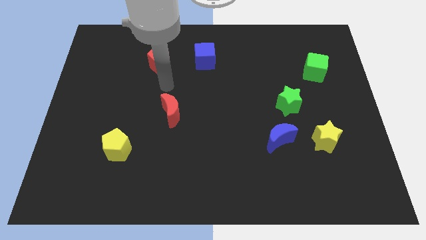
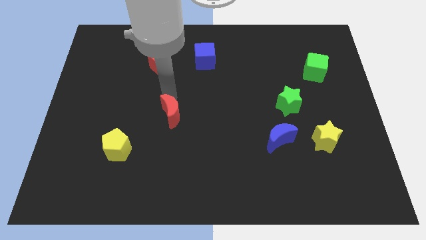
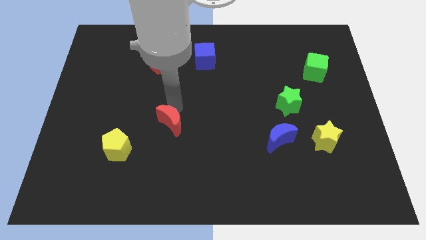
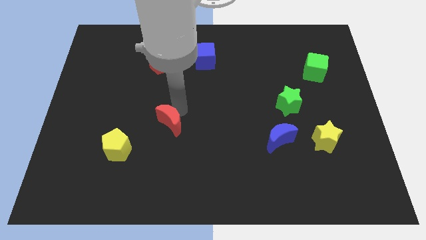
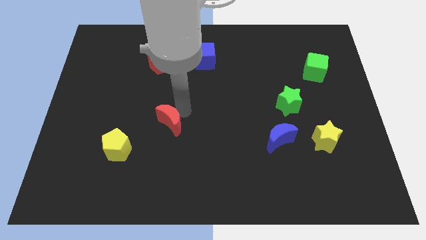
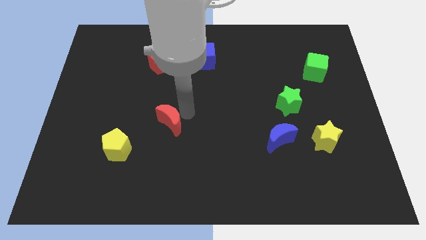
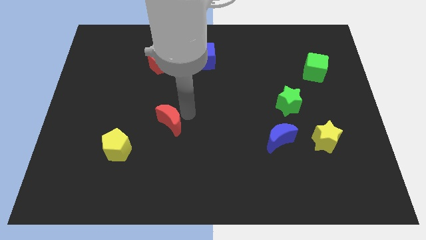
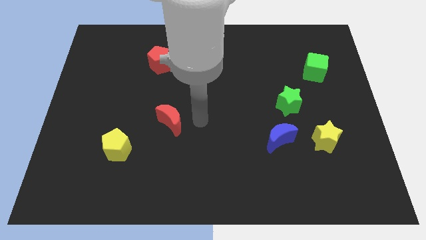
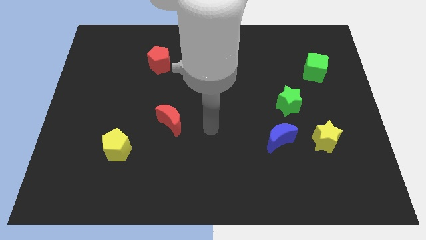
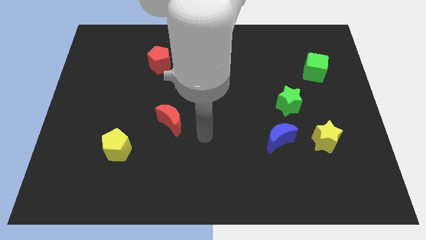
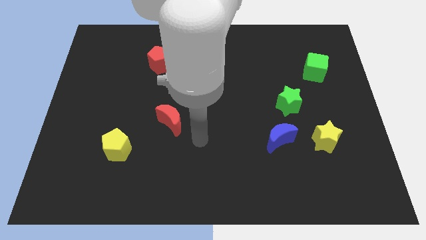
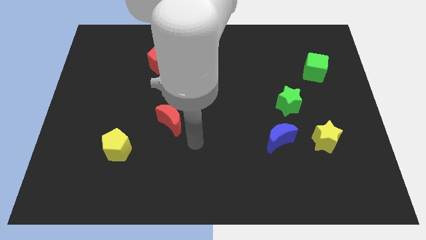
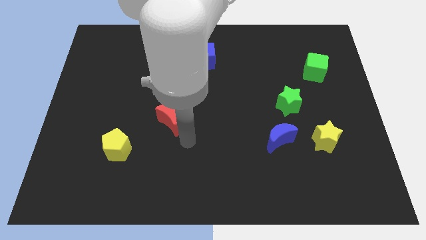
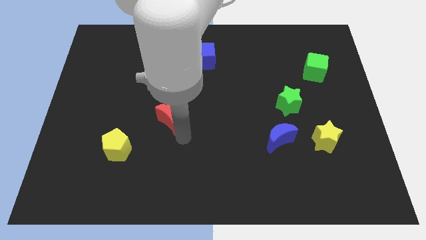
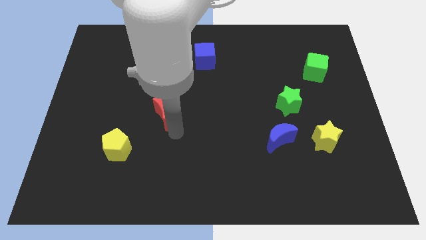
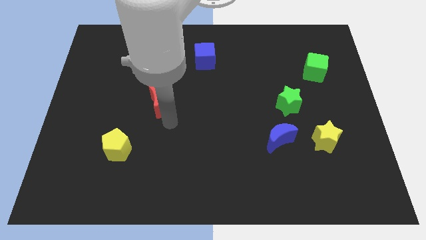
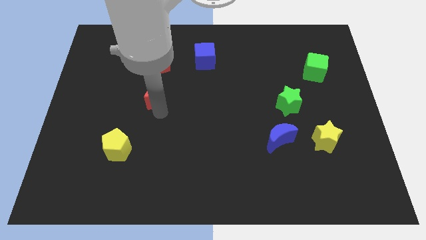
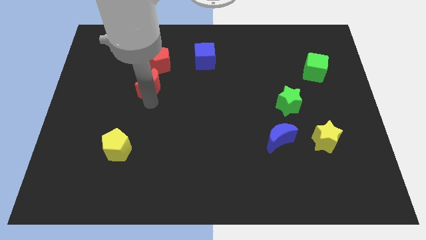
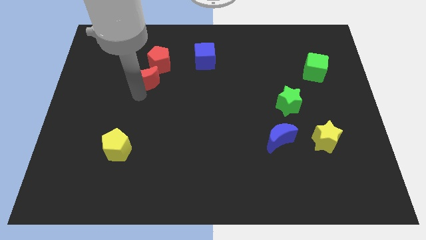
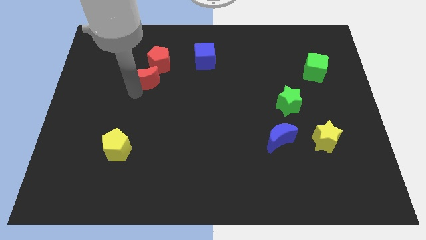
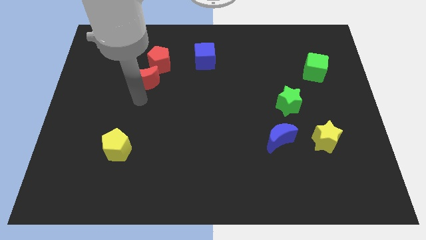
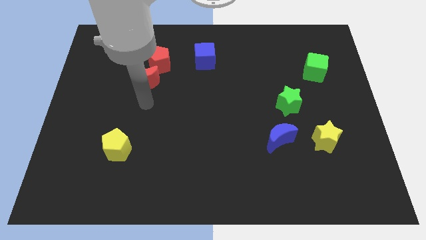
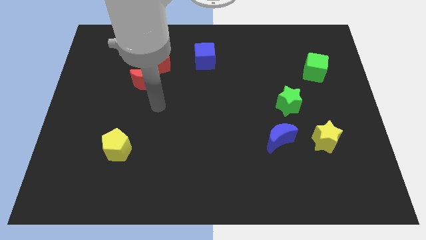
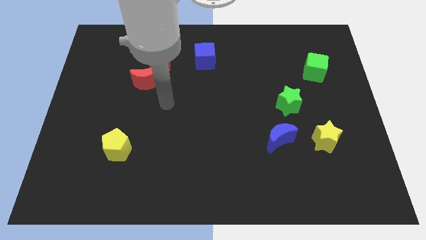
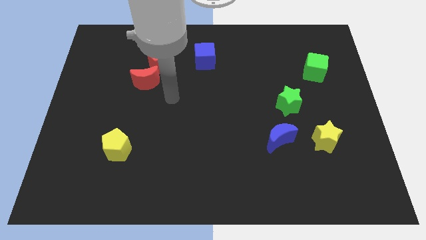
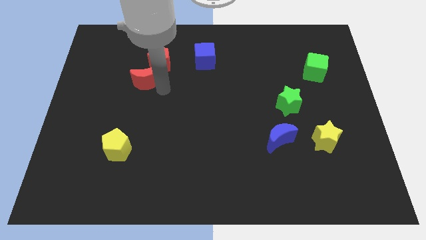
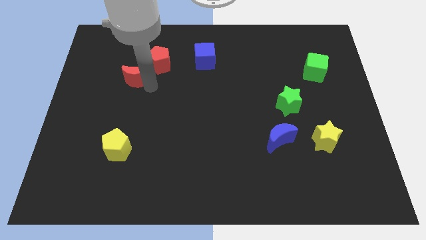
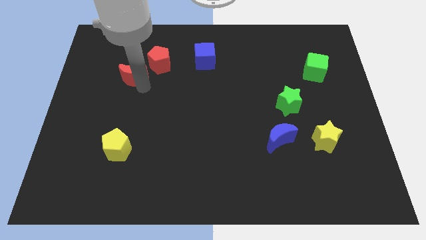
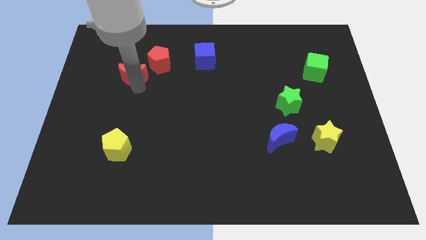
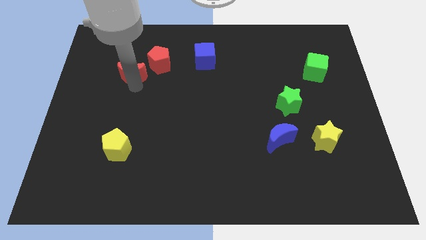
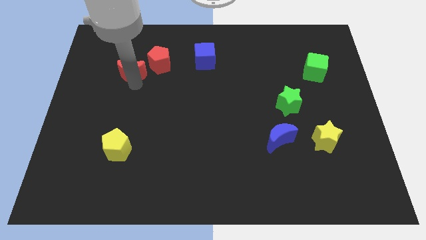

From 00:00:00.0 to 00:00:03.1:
move the red crescent left to the red pentagon

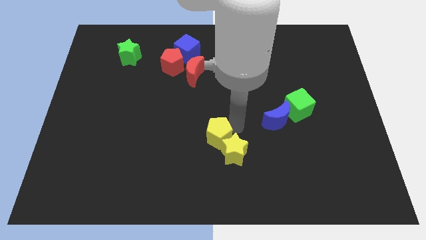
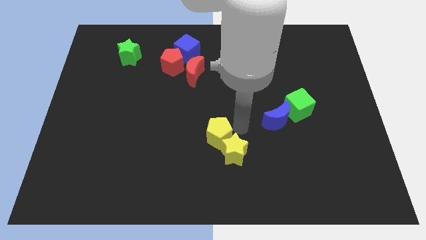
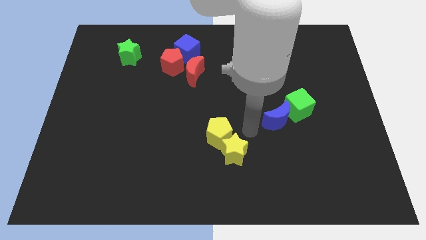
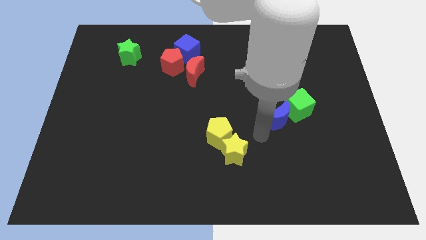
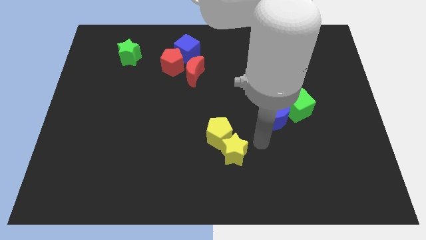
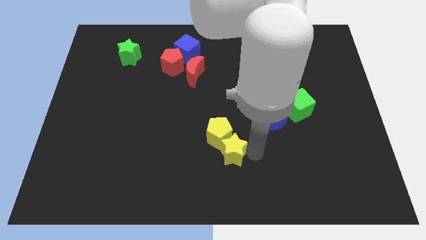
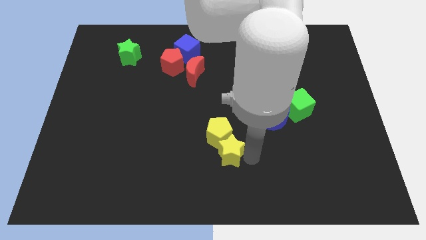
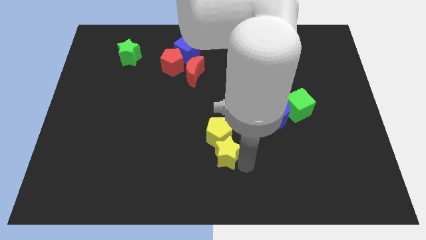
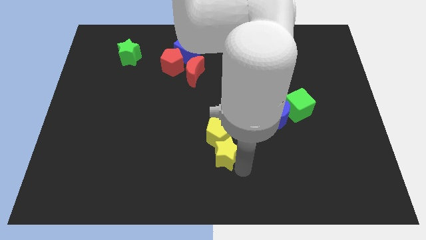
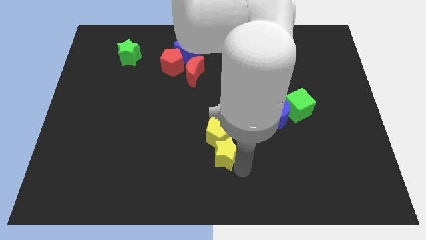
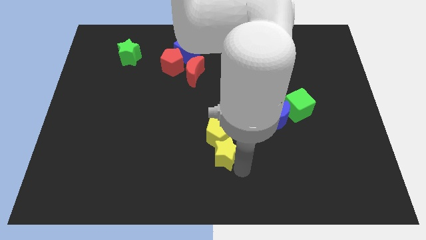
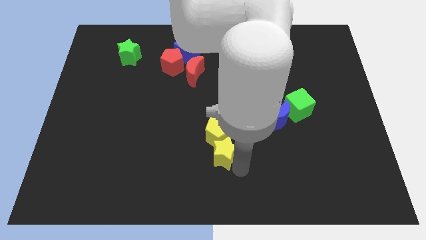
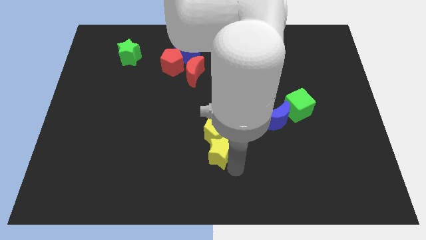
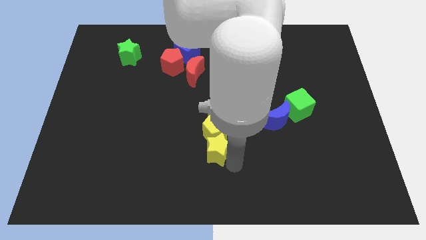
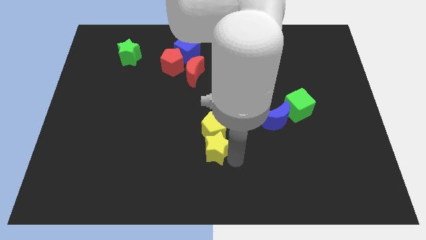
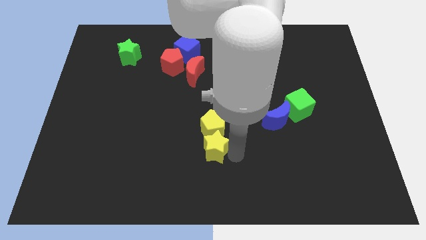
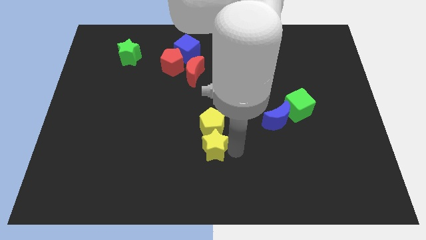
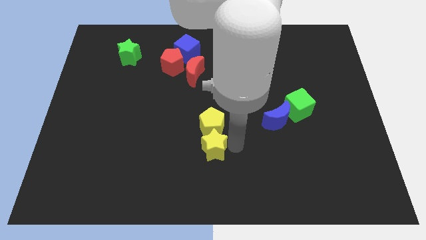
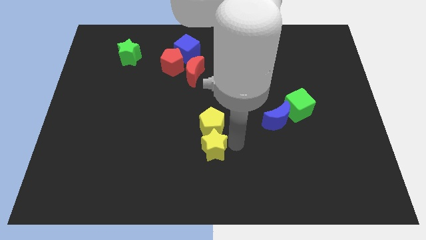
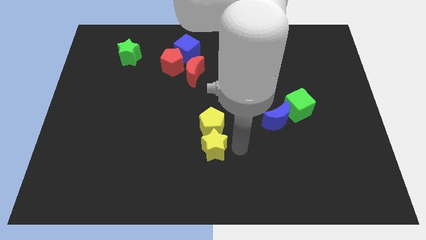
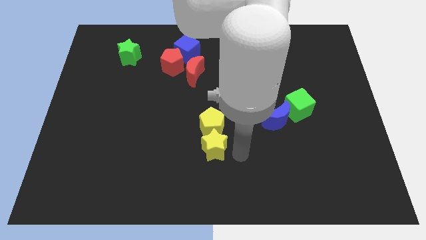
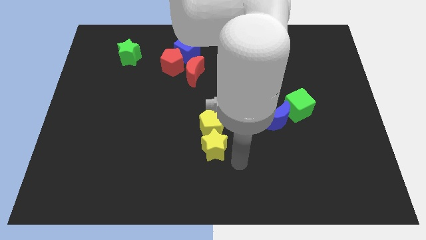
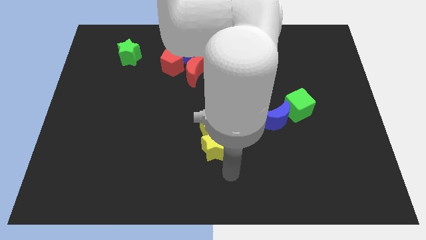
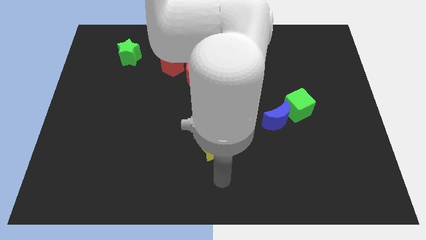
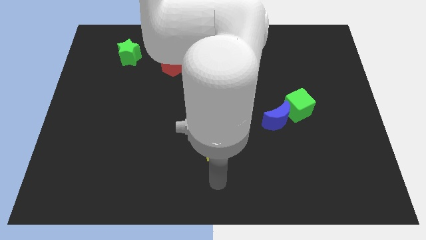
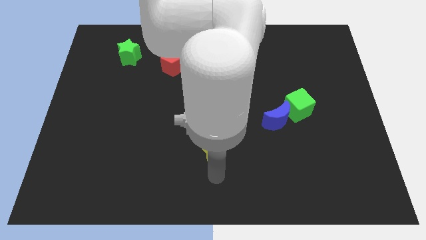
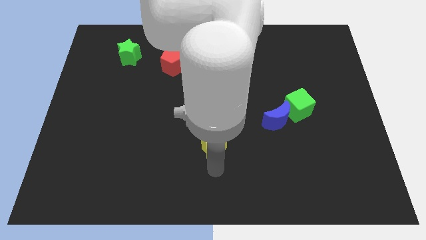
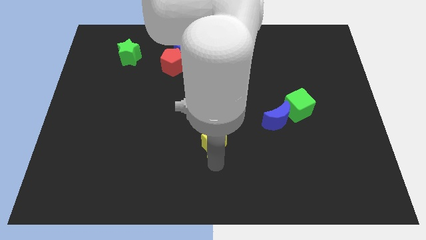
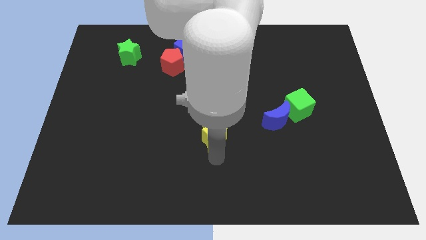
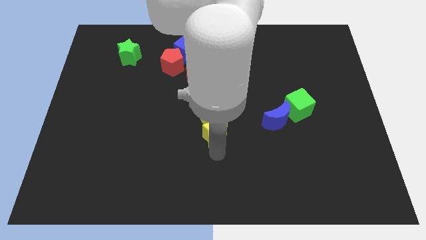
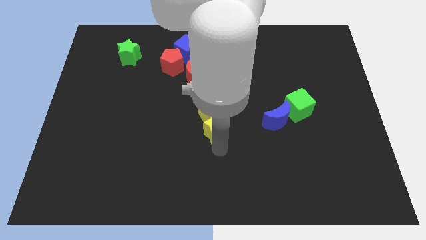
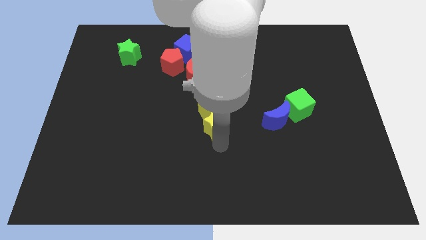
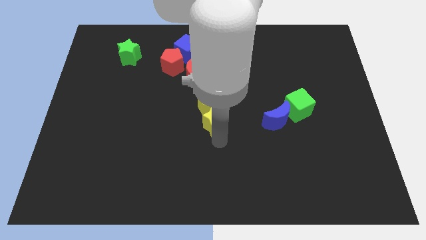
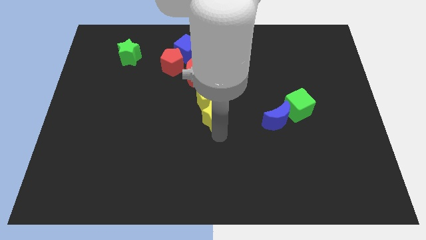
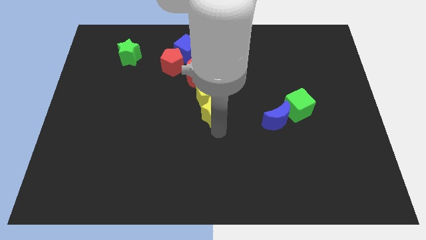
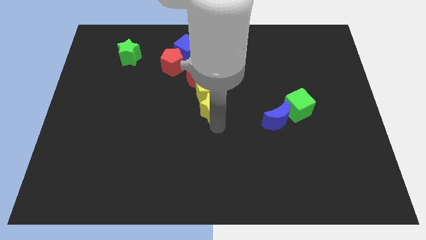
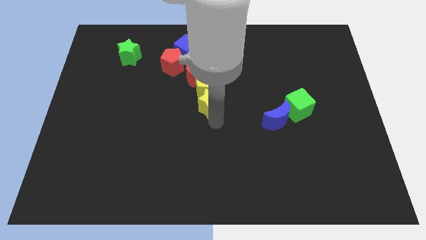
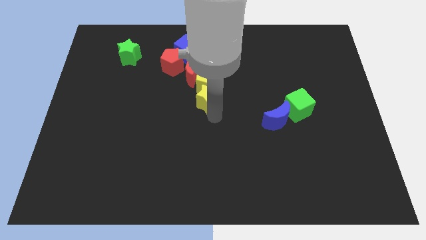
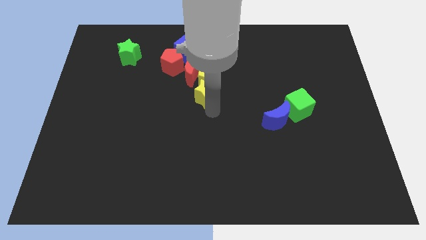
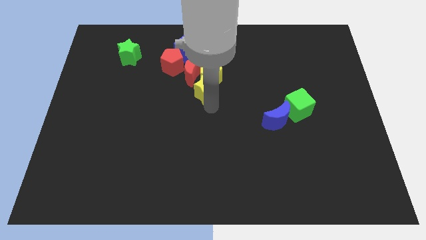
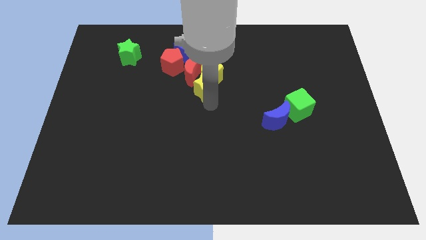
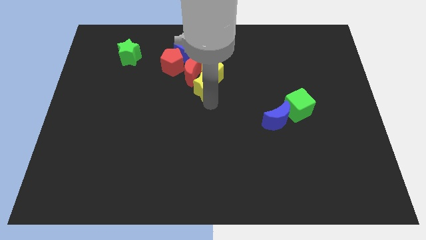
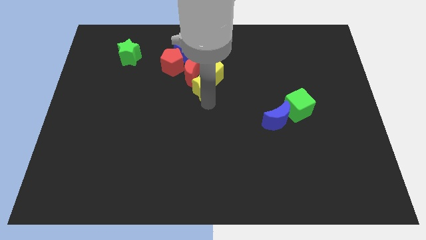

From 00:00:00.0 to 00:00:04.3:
move the yellow pentagon and yellow star into the right side of the red crescent

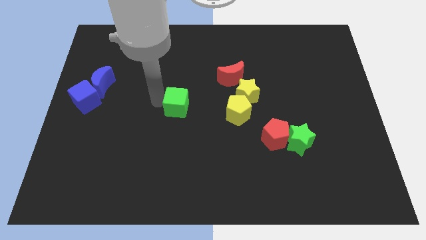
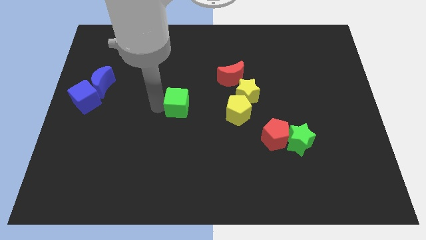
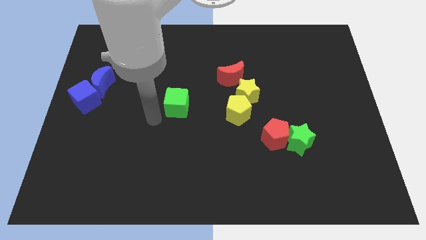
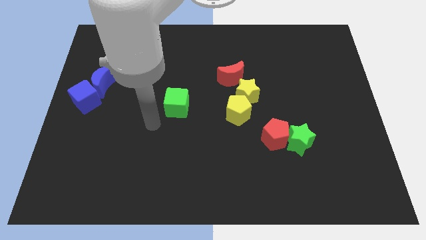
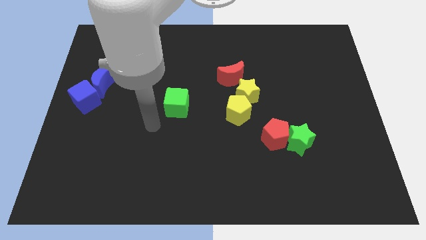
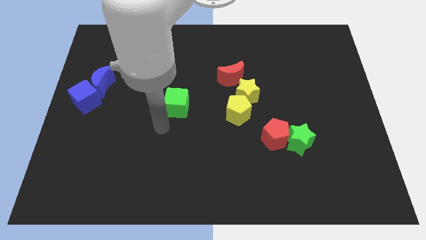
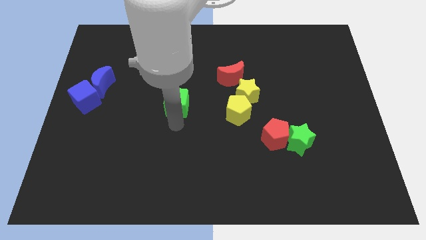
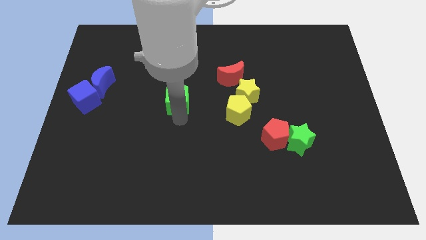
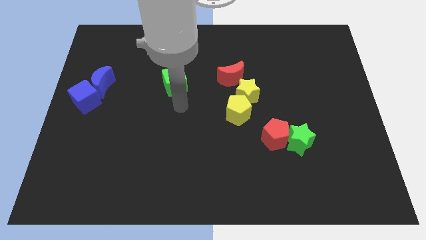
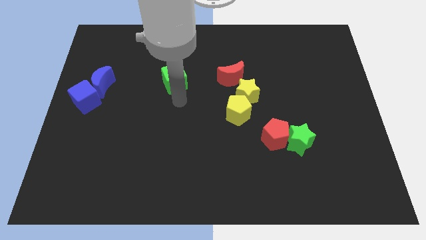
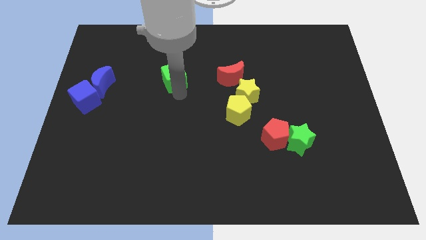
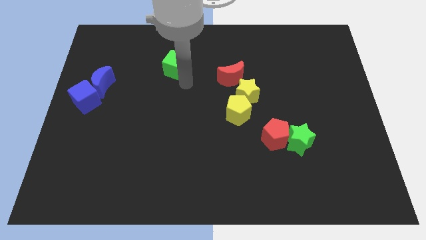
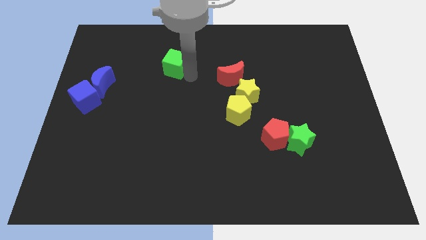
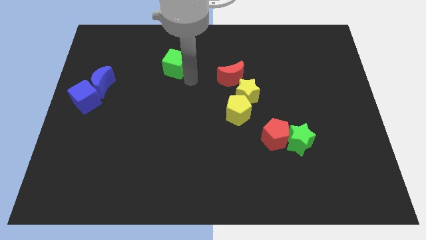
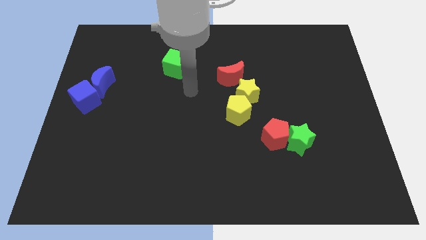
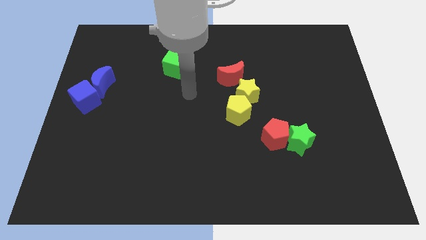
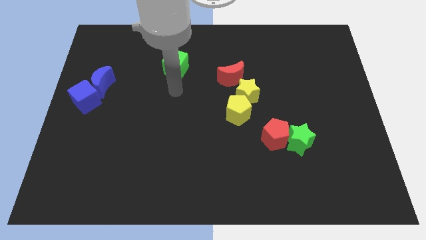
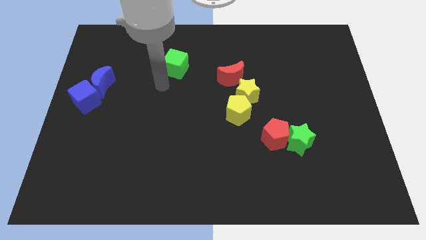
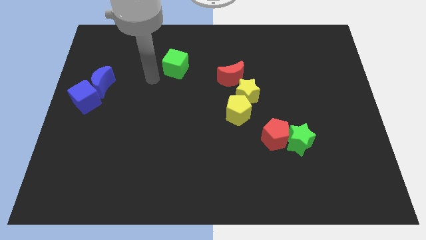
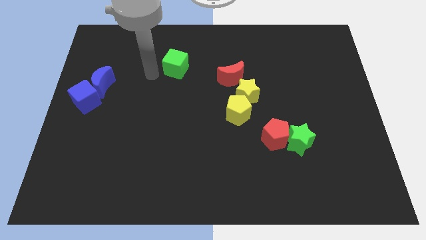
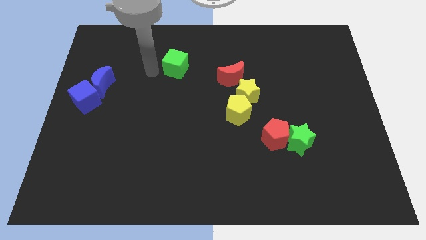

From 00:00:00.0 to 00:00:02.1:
push the green cube towards the top center of the board
